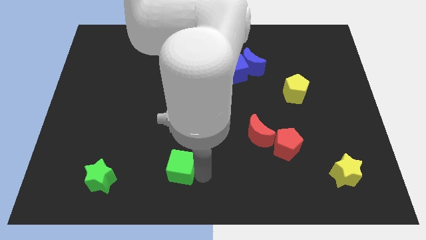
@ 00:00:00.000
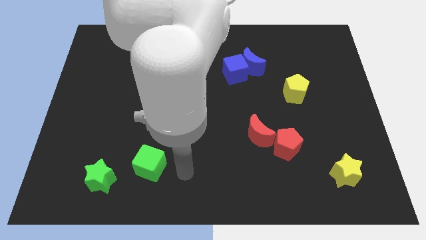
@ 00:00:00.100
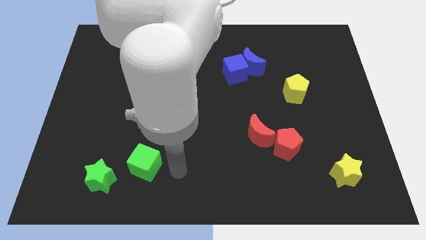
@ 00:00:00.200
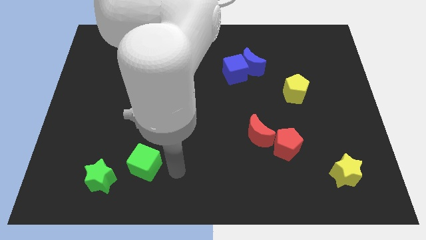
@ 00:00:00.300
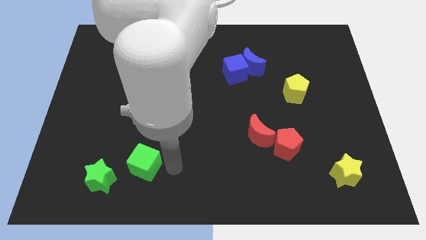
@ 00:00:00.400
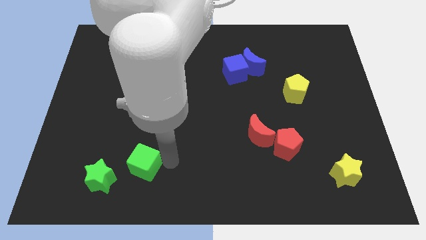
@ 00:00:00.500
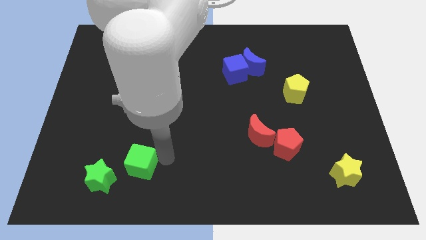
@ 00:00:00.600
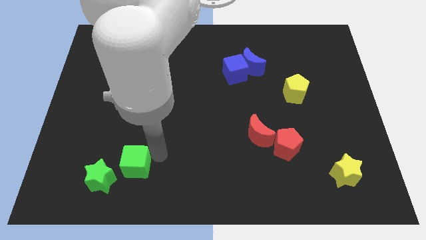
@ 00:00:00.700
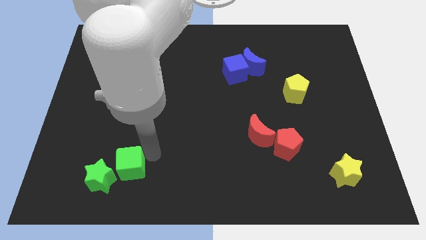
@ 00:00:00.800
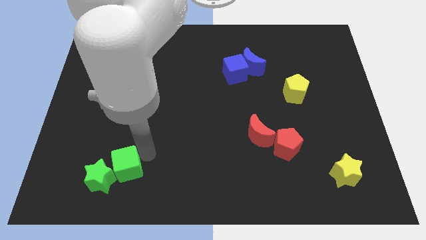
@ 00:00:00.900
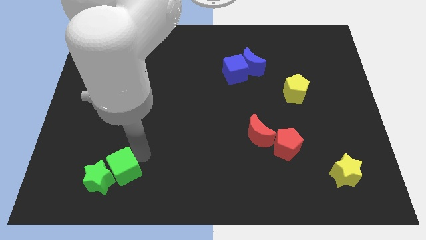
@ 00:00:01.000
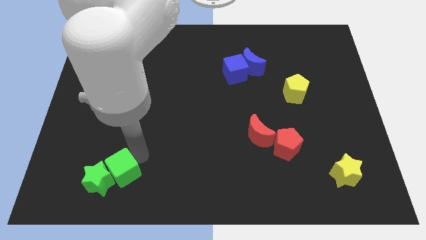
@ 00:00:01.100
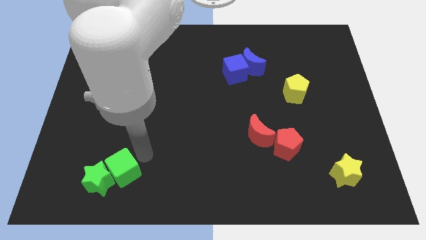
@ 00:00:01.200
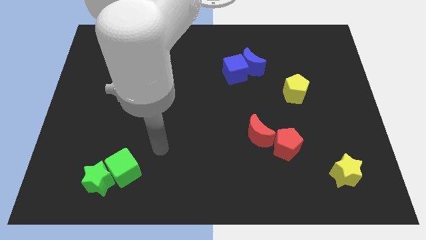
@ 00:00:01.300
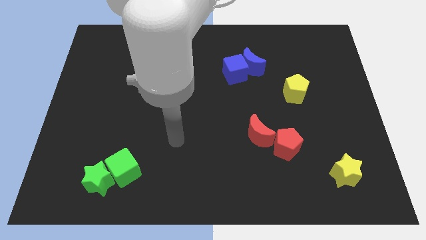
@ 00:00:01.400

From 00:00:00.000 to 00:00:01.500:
push the green cube into the green star

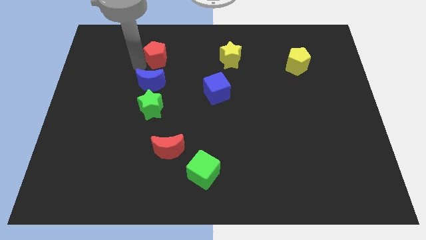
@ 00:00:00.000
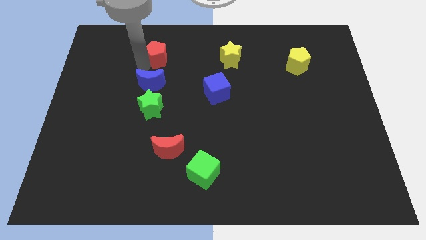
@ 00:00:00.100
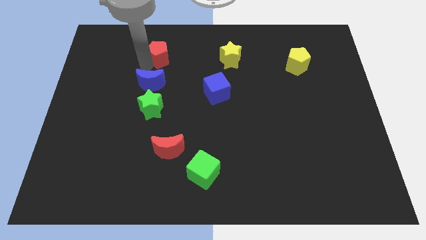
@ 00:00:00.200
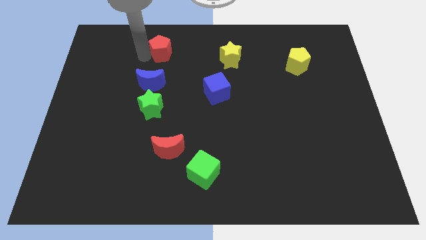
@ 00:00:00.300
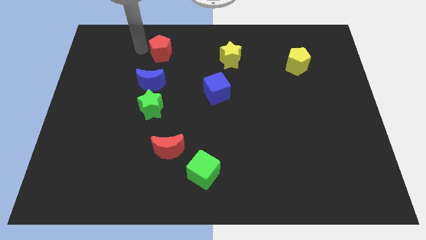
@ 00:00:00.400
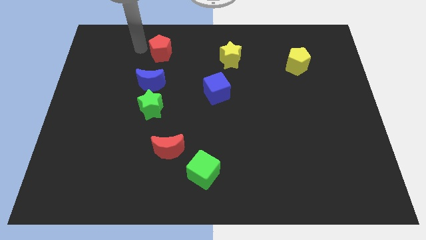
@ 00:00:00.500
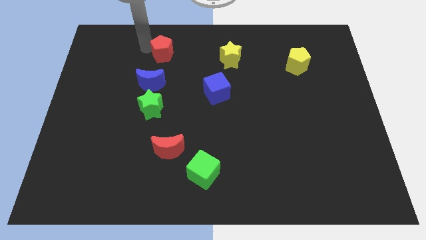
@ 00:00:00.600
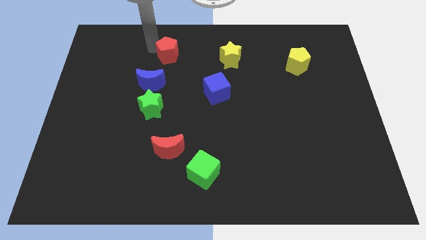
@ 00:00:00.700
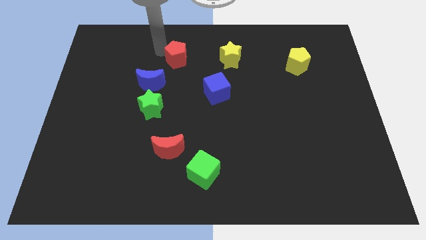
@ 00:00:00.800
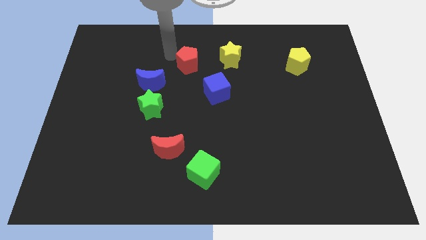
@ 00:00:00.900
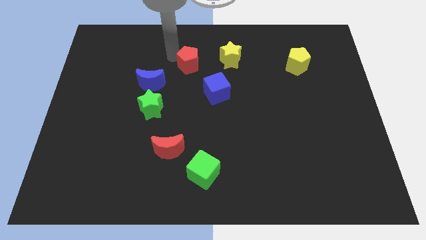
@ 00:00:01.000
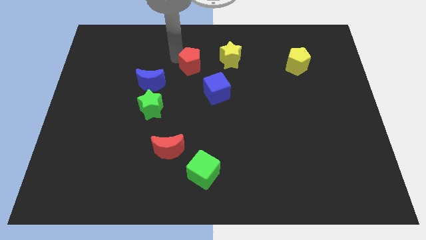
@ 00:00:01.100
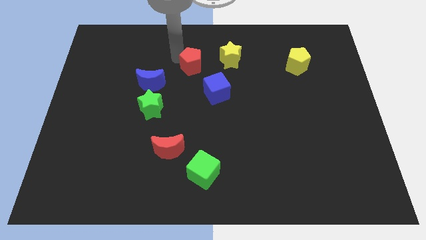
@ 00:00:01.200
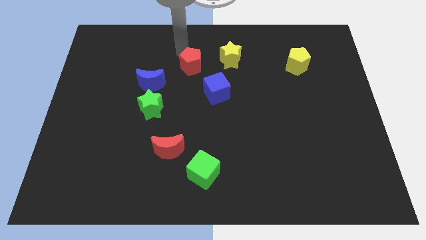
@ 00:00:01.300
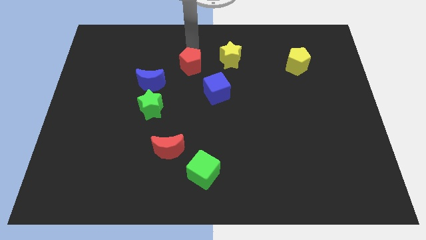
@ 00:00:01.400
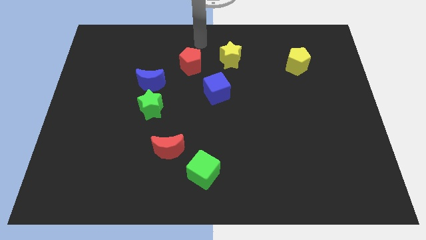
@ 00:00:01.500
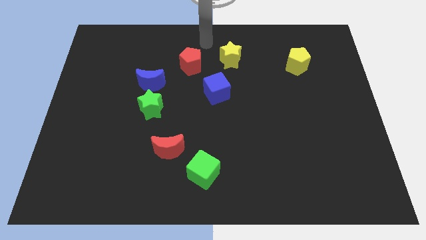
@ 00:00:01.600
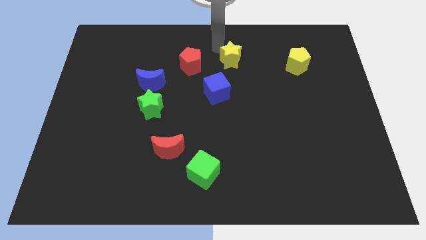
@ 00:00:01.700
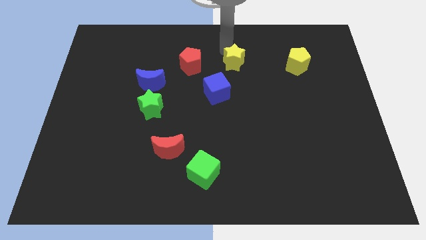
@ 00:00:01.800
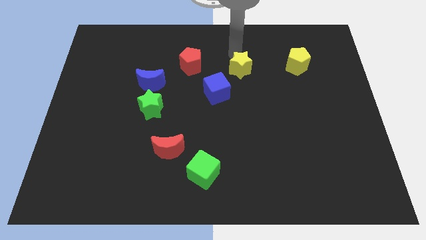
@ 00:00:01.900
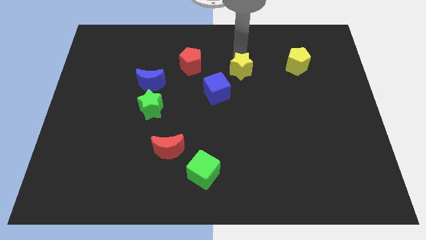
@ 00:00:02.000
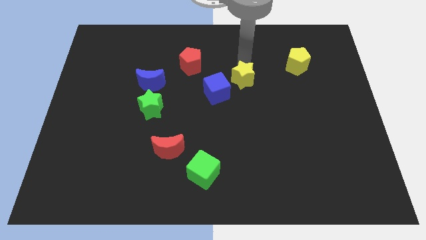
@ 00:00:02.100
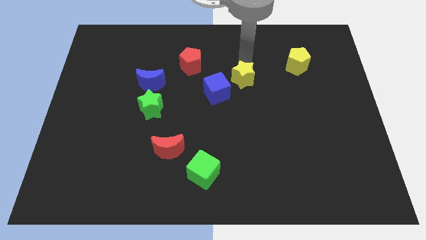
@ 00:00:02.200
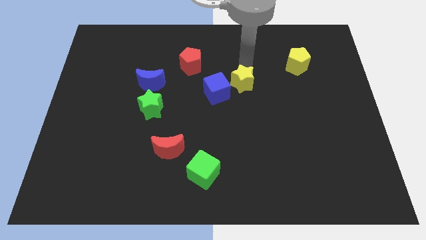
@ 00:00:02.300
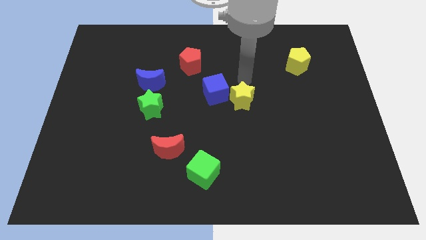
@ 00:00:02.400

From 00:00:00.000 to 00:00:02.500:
place the yellow star right to the blue cube

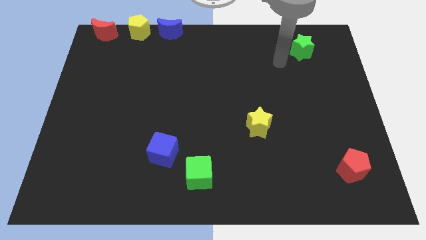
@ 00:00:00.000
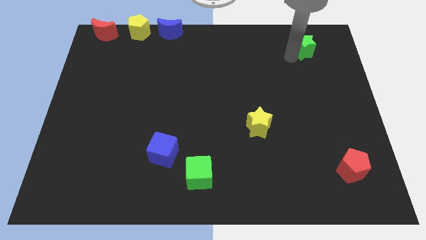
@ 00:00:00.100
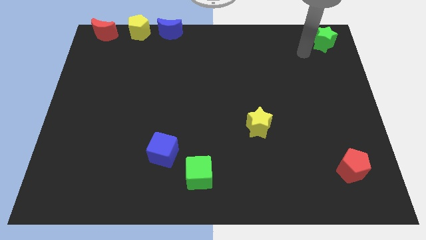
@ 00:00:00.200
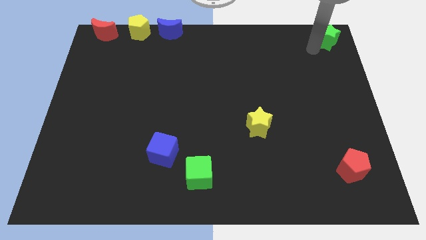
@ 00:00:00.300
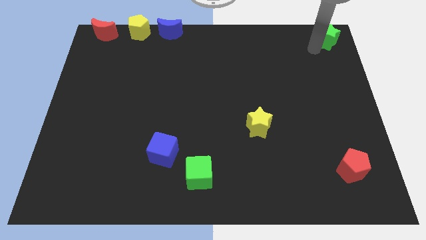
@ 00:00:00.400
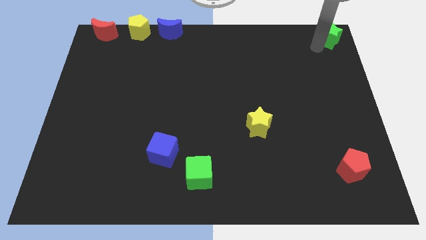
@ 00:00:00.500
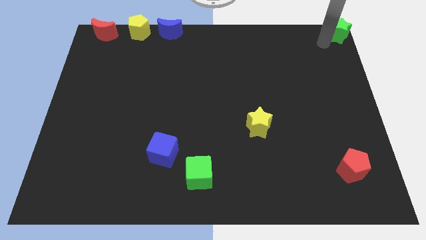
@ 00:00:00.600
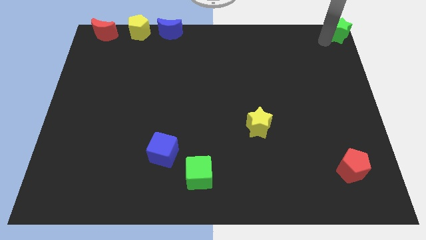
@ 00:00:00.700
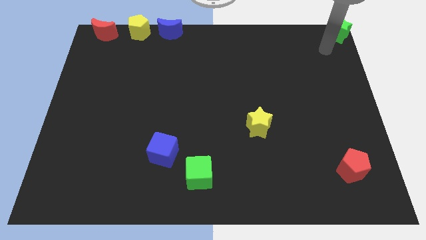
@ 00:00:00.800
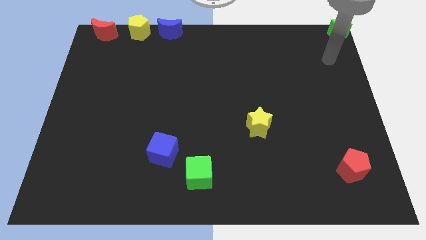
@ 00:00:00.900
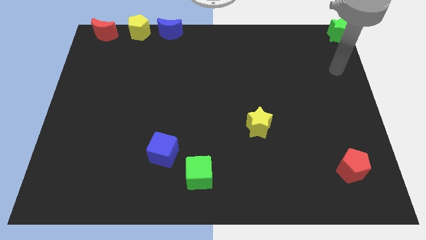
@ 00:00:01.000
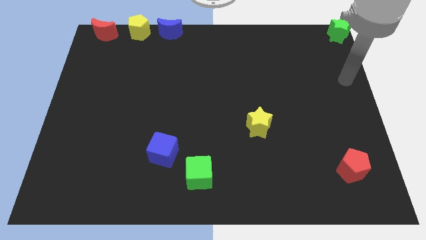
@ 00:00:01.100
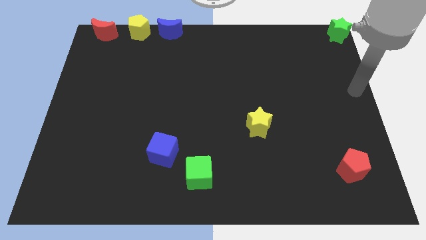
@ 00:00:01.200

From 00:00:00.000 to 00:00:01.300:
place the green star right top corner of the board

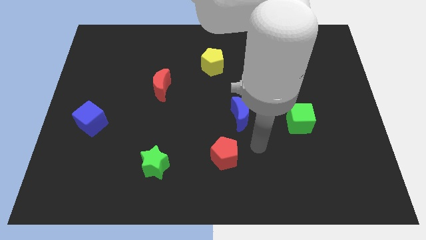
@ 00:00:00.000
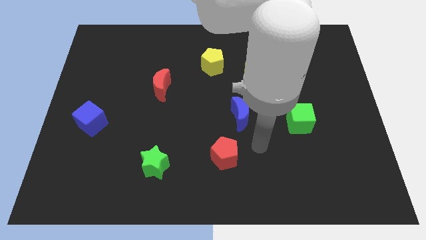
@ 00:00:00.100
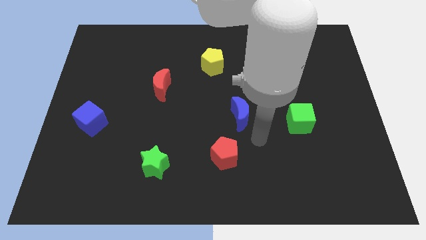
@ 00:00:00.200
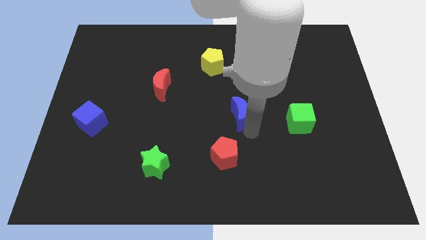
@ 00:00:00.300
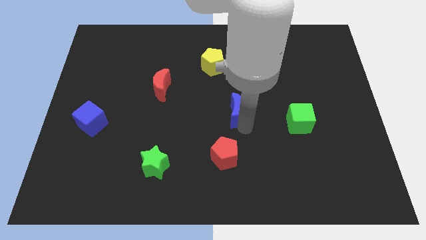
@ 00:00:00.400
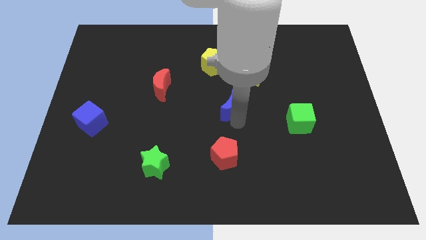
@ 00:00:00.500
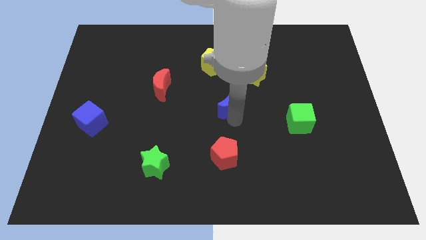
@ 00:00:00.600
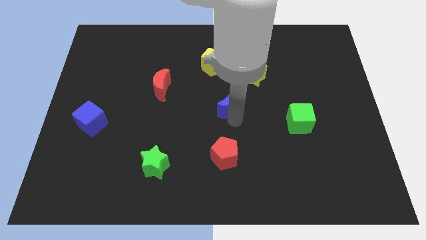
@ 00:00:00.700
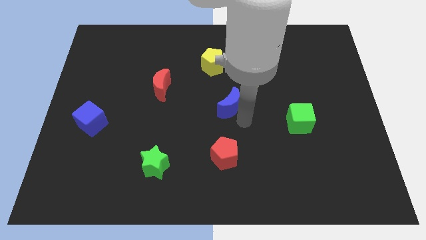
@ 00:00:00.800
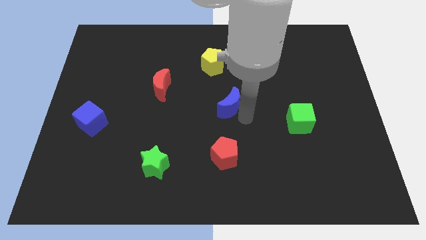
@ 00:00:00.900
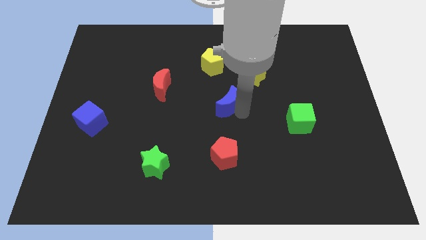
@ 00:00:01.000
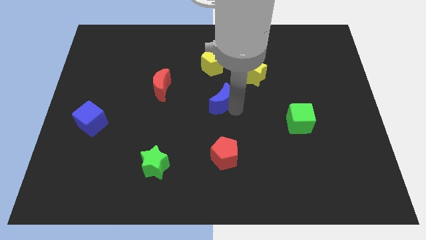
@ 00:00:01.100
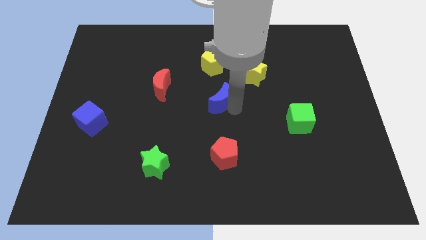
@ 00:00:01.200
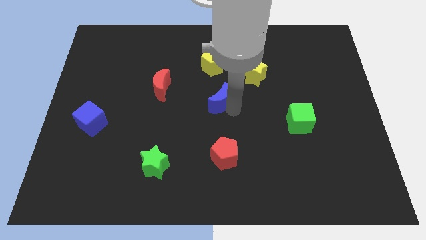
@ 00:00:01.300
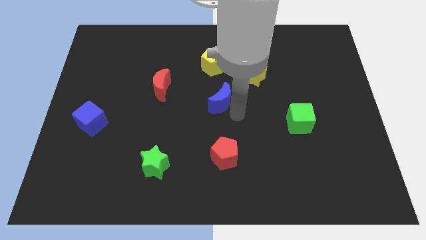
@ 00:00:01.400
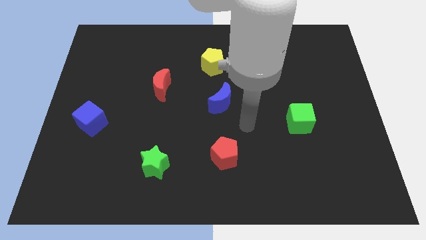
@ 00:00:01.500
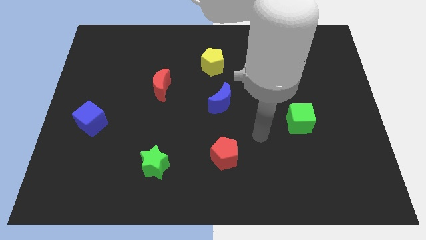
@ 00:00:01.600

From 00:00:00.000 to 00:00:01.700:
move the blue moon down to the yellow pentagon

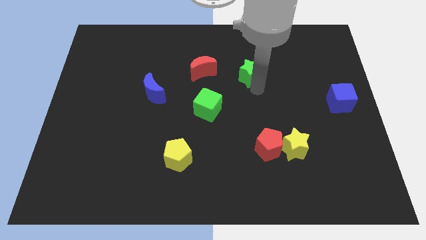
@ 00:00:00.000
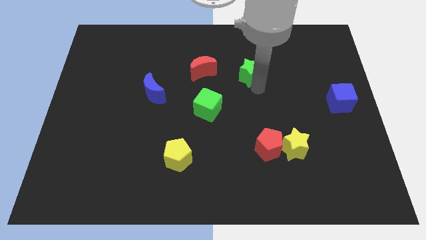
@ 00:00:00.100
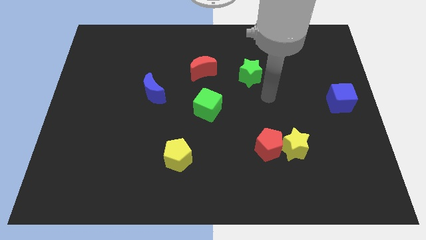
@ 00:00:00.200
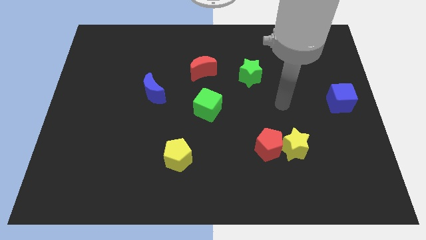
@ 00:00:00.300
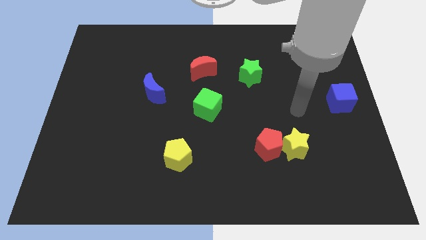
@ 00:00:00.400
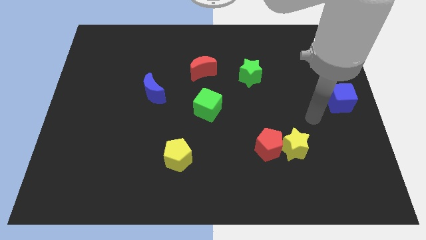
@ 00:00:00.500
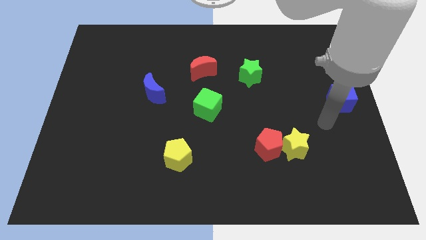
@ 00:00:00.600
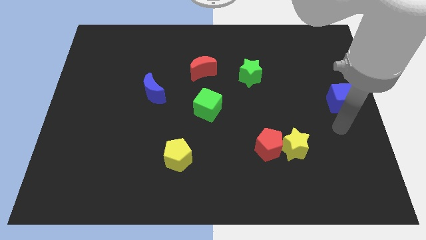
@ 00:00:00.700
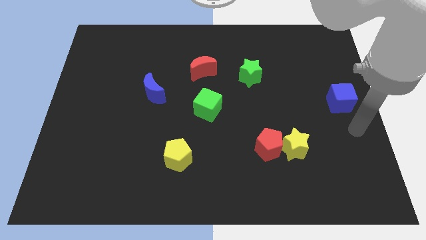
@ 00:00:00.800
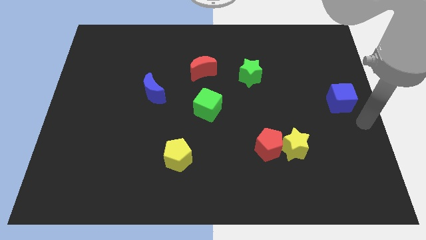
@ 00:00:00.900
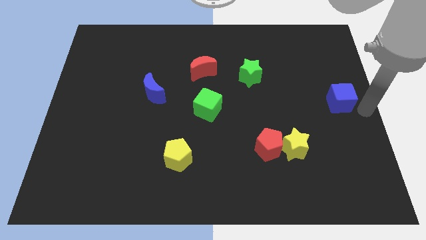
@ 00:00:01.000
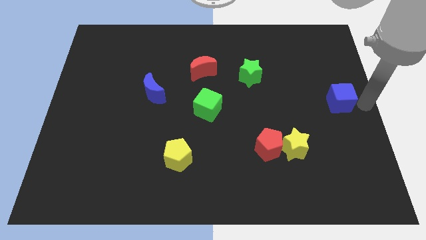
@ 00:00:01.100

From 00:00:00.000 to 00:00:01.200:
move your arm away from the green star

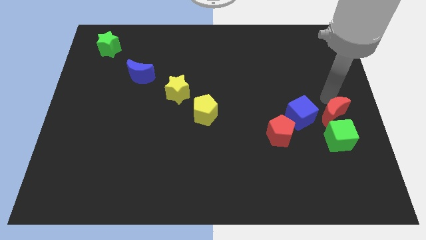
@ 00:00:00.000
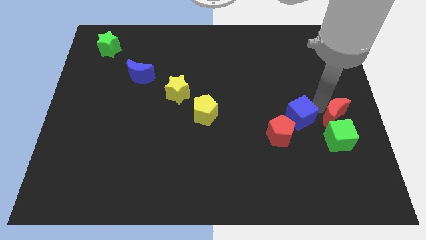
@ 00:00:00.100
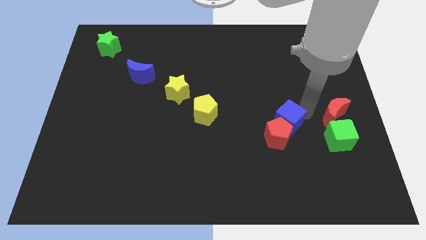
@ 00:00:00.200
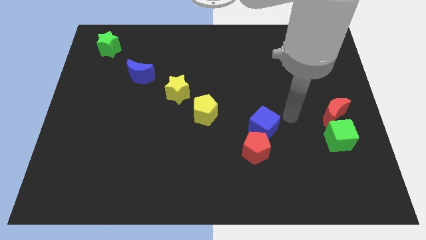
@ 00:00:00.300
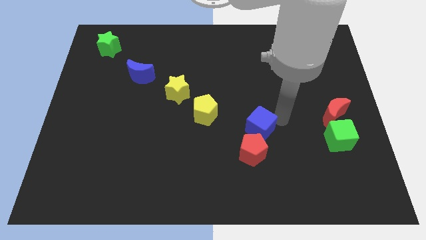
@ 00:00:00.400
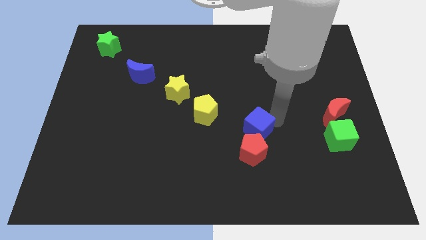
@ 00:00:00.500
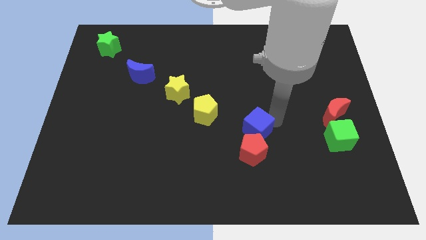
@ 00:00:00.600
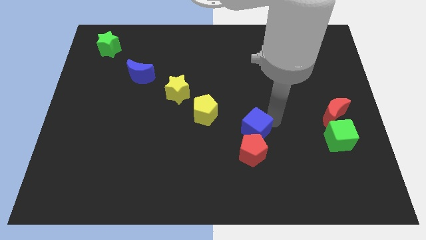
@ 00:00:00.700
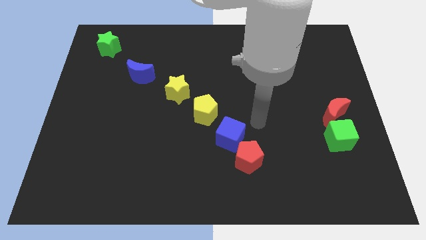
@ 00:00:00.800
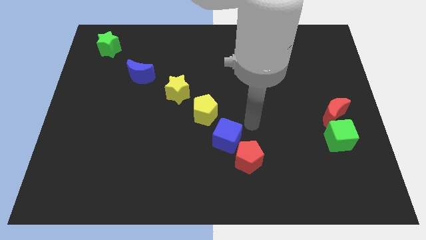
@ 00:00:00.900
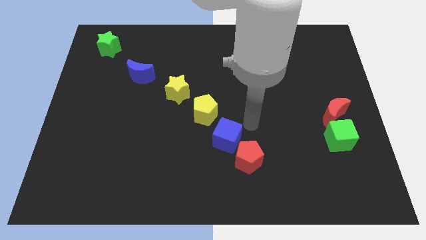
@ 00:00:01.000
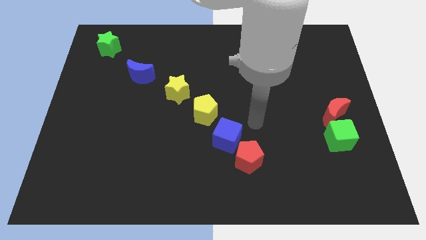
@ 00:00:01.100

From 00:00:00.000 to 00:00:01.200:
push the blue cube to the bottom right of the yellow pentagon
